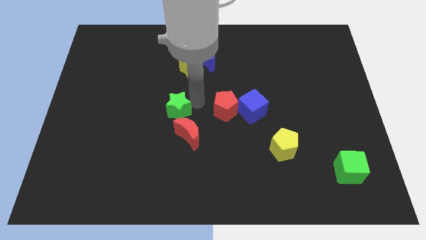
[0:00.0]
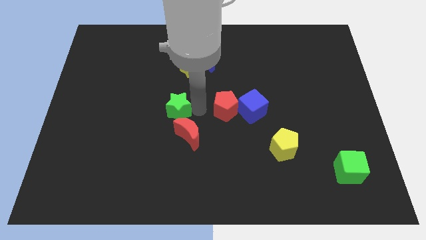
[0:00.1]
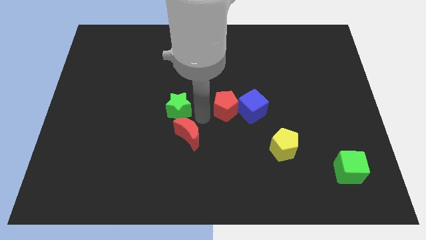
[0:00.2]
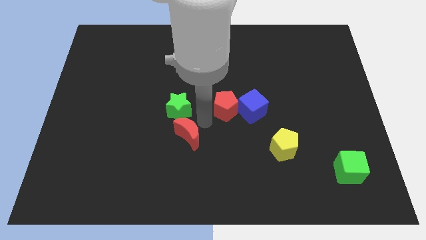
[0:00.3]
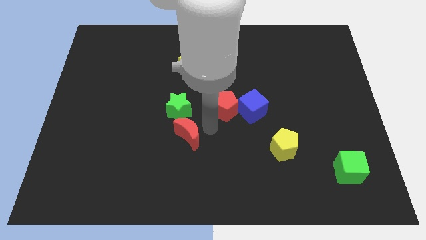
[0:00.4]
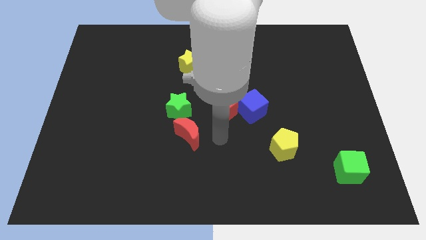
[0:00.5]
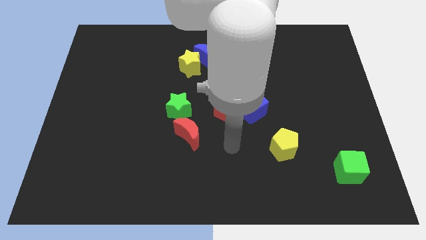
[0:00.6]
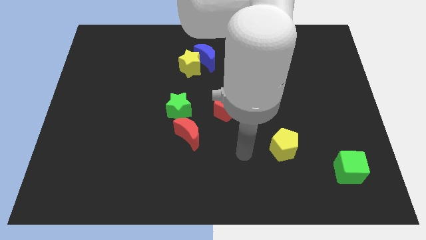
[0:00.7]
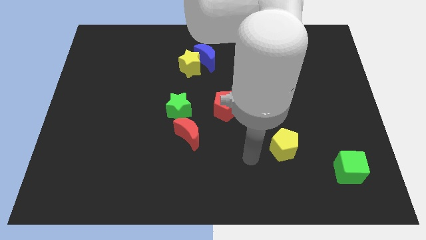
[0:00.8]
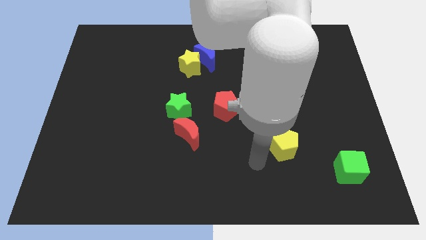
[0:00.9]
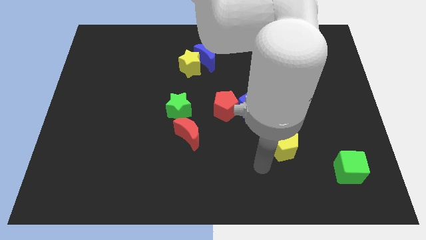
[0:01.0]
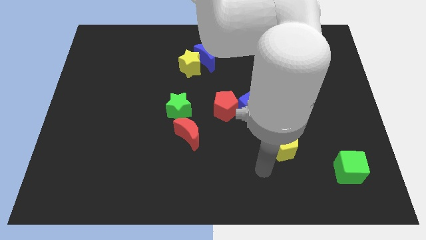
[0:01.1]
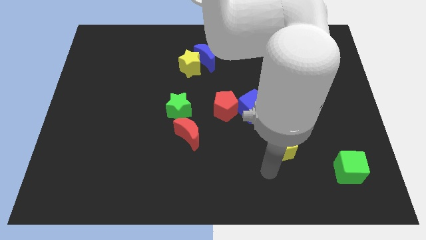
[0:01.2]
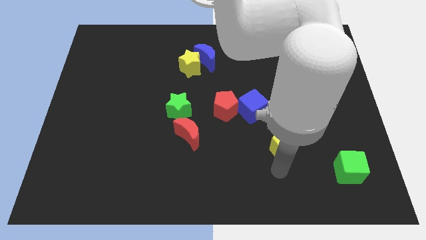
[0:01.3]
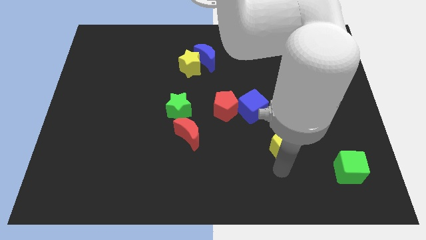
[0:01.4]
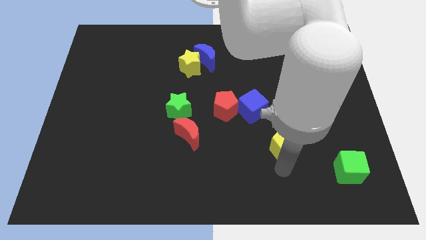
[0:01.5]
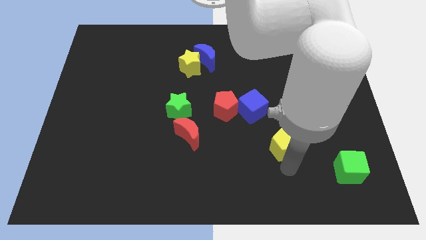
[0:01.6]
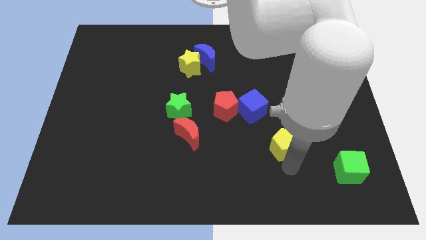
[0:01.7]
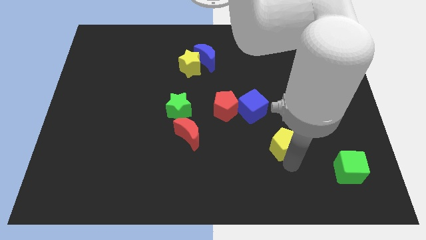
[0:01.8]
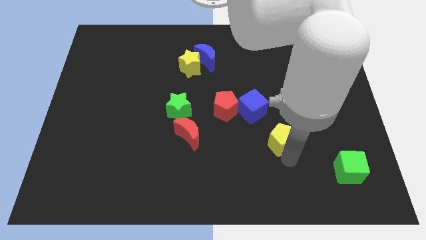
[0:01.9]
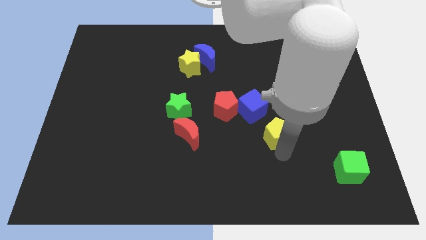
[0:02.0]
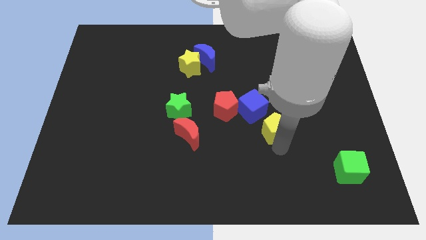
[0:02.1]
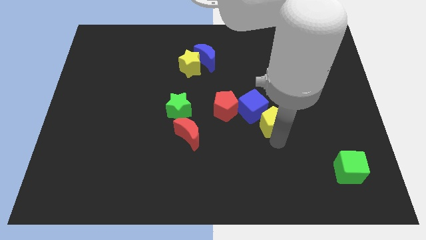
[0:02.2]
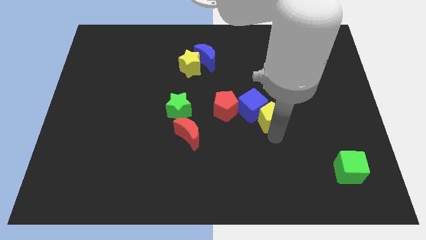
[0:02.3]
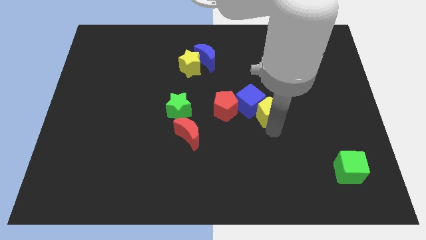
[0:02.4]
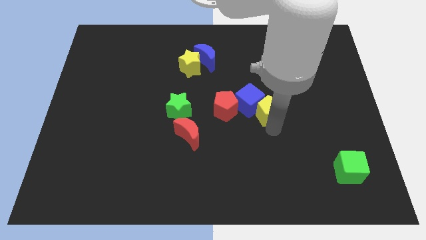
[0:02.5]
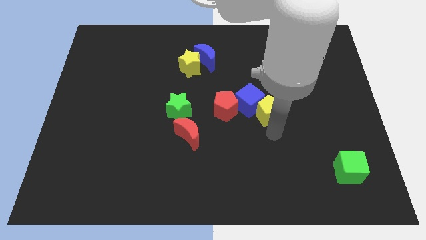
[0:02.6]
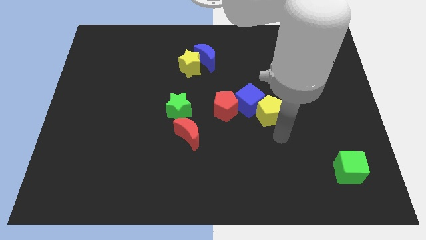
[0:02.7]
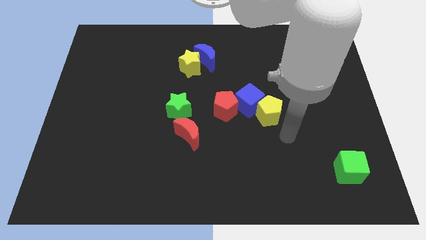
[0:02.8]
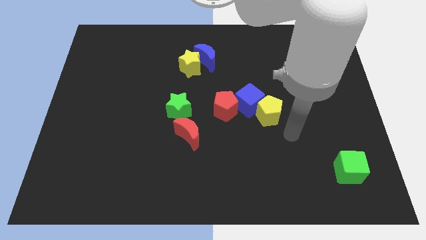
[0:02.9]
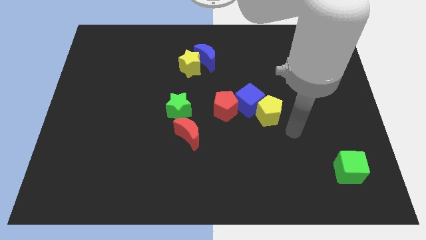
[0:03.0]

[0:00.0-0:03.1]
push the yellow pentagon into blue cube diagonal right

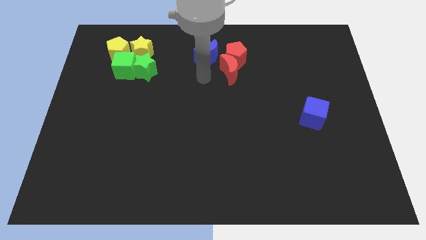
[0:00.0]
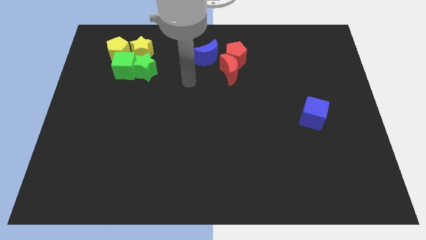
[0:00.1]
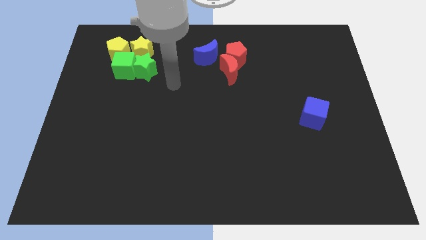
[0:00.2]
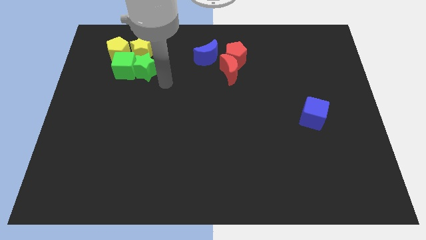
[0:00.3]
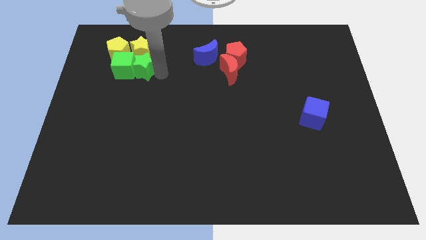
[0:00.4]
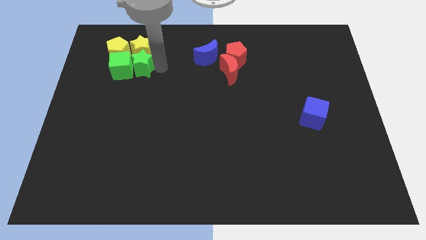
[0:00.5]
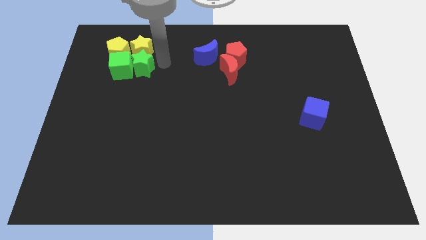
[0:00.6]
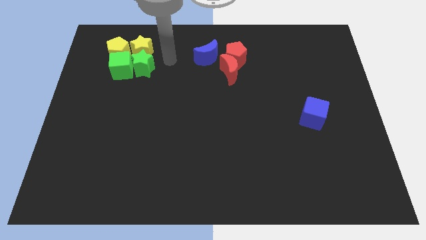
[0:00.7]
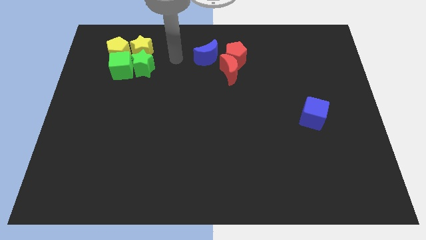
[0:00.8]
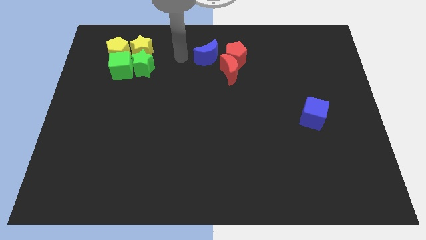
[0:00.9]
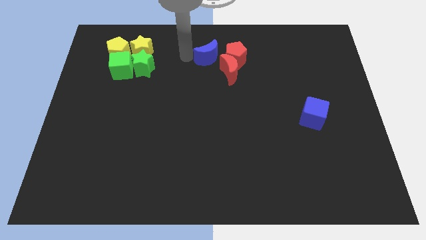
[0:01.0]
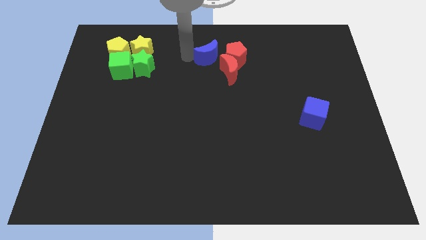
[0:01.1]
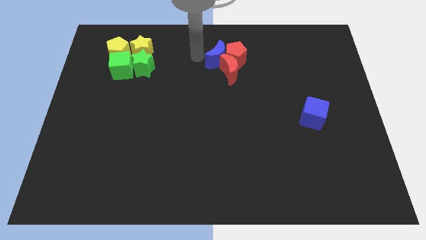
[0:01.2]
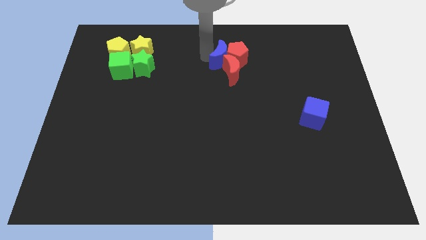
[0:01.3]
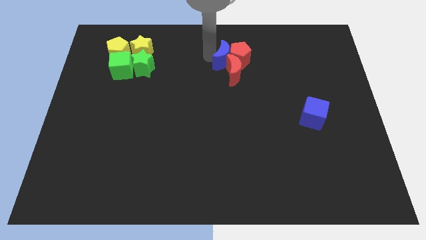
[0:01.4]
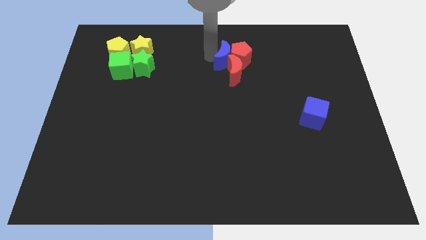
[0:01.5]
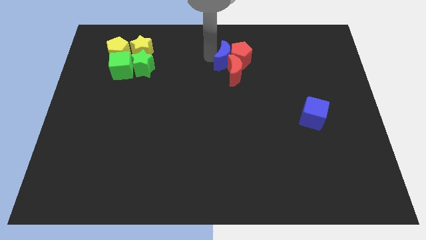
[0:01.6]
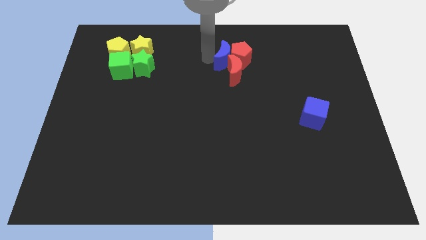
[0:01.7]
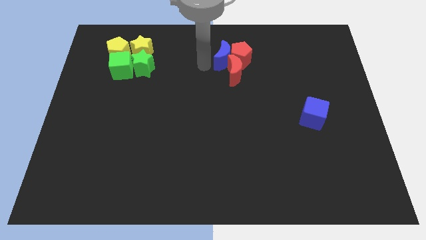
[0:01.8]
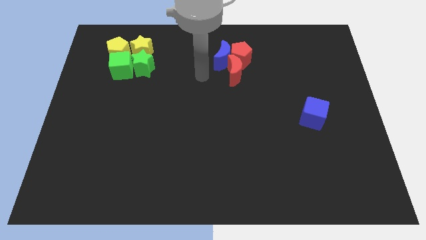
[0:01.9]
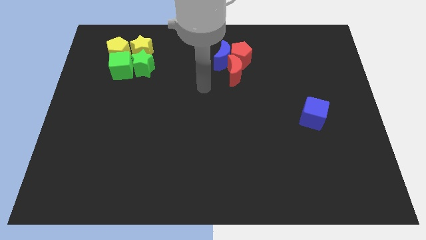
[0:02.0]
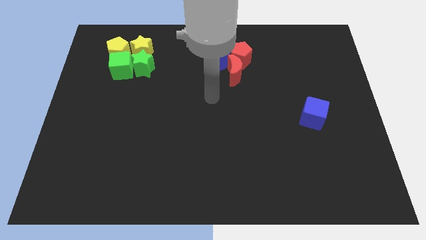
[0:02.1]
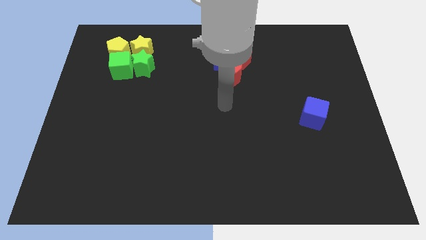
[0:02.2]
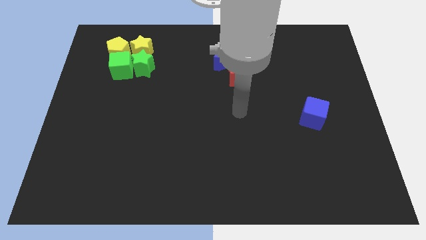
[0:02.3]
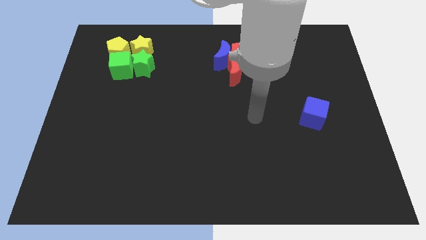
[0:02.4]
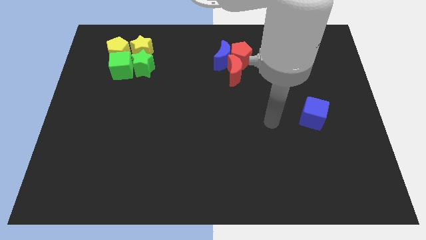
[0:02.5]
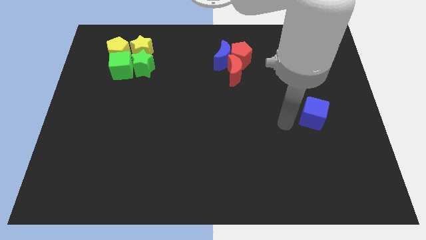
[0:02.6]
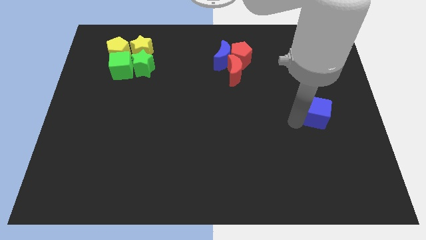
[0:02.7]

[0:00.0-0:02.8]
push the blue crescent into the red blocks

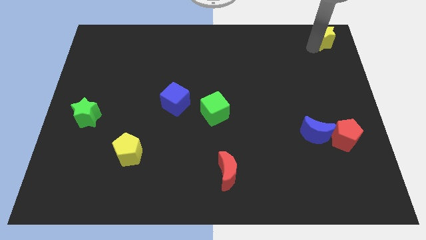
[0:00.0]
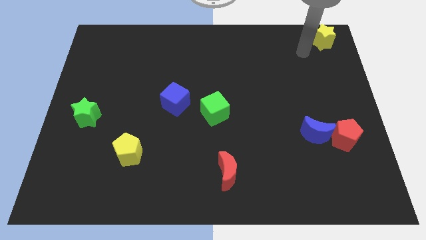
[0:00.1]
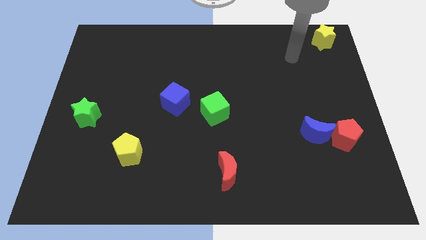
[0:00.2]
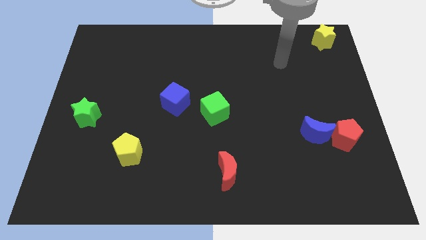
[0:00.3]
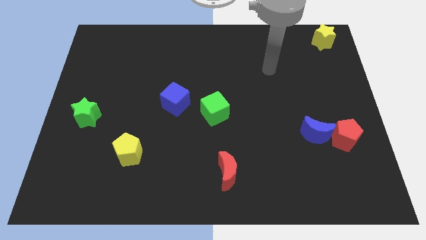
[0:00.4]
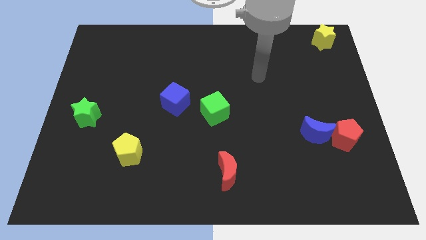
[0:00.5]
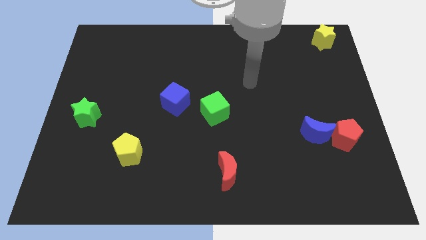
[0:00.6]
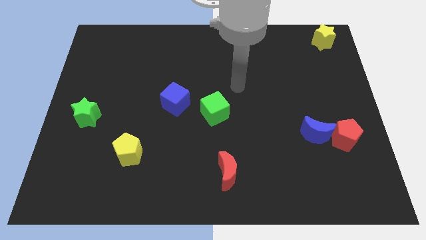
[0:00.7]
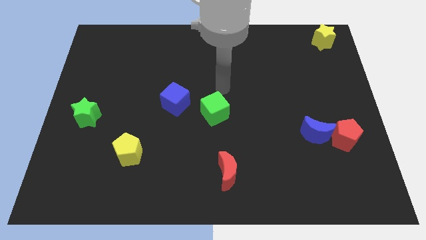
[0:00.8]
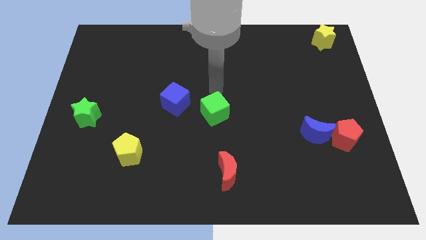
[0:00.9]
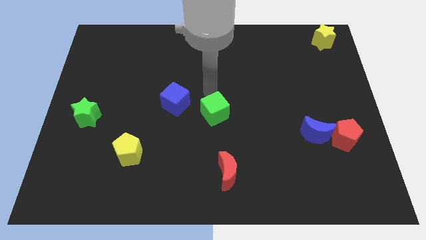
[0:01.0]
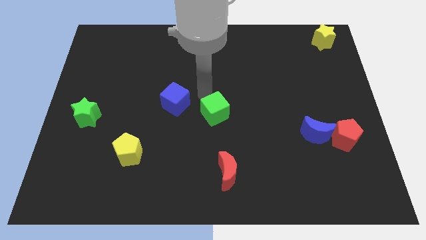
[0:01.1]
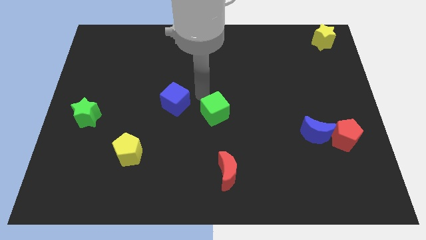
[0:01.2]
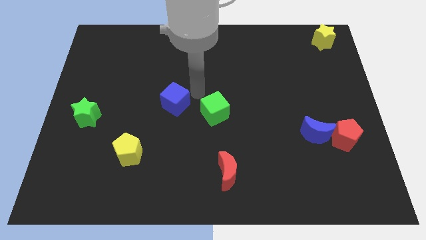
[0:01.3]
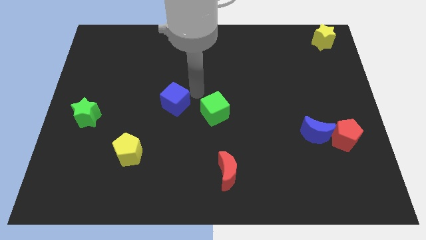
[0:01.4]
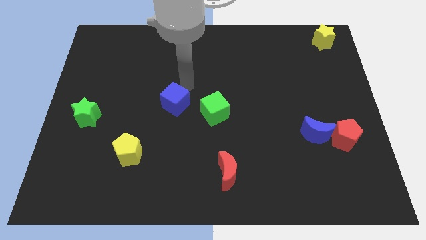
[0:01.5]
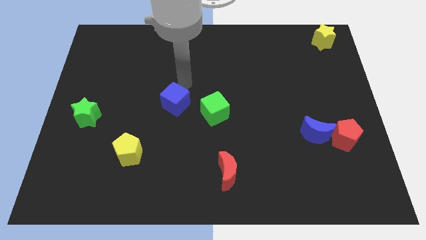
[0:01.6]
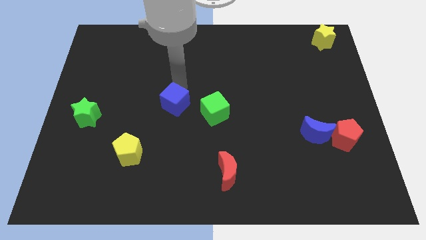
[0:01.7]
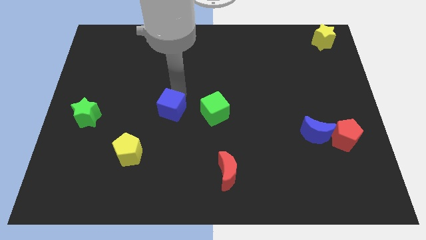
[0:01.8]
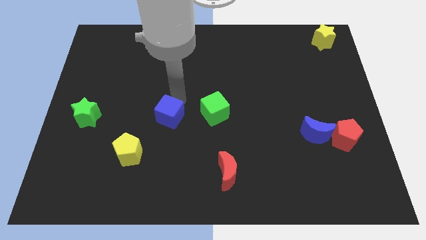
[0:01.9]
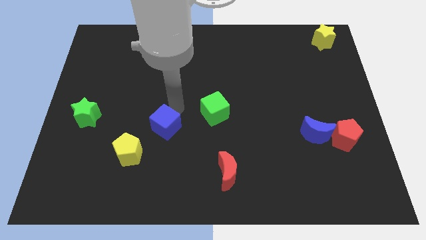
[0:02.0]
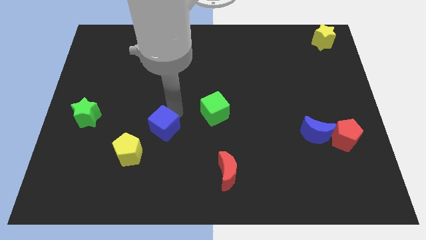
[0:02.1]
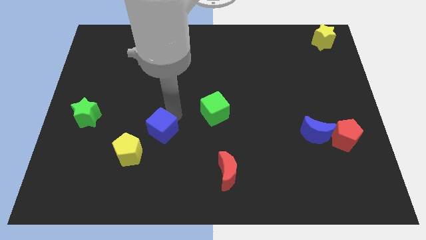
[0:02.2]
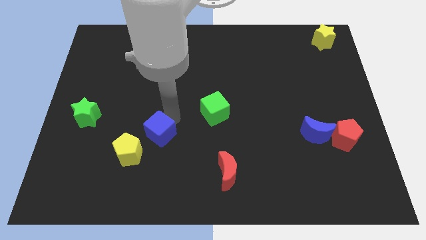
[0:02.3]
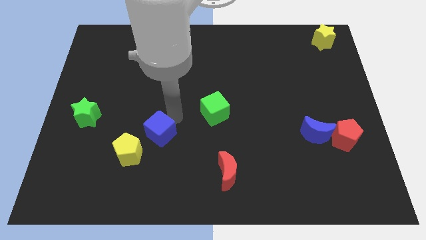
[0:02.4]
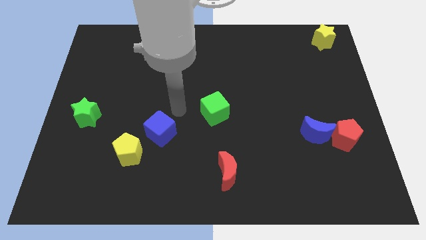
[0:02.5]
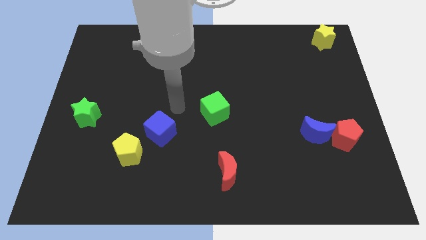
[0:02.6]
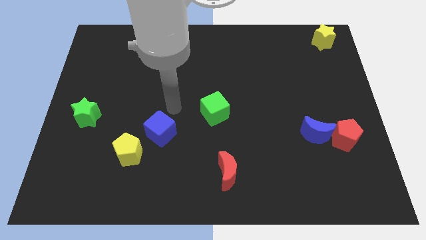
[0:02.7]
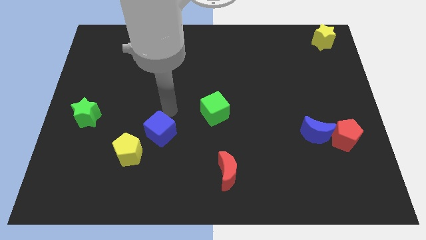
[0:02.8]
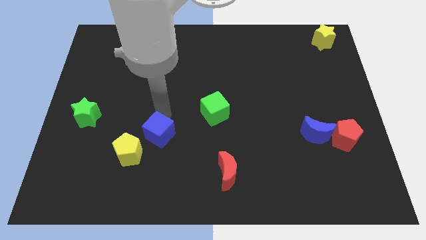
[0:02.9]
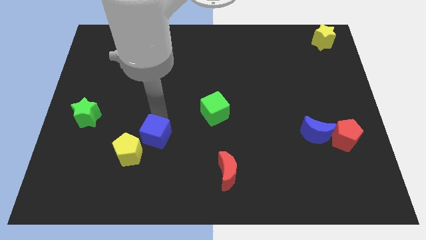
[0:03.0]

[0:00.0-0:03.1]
push blue cube into yellow pentagon
